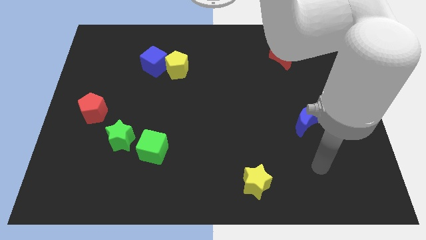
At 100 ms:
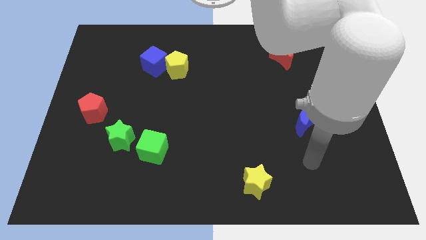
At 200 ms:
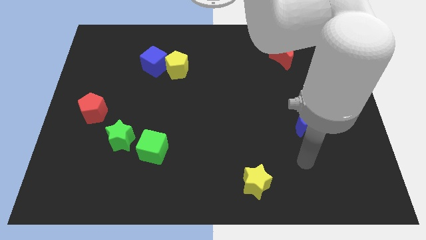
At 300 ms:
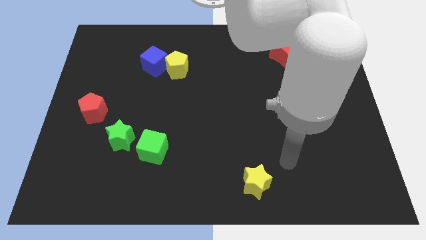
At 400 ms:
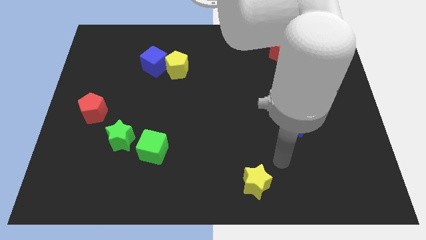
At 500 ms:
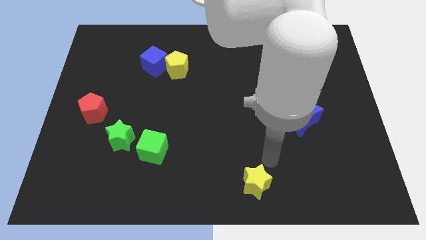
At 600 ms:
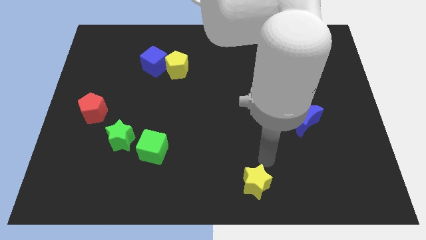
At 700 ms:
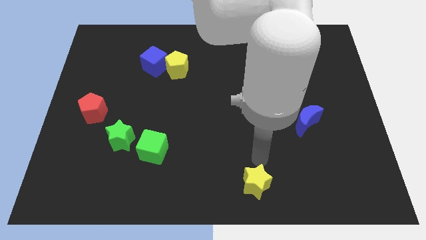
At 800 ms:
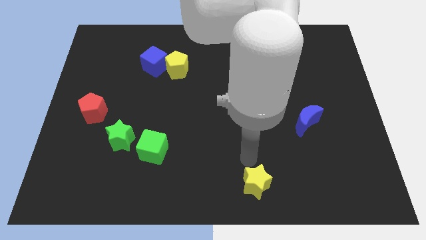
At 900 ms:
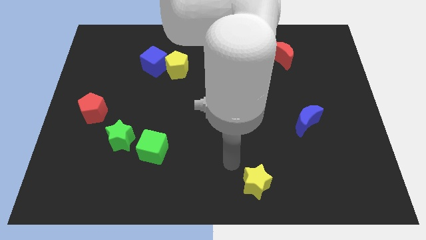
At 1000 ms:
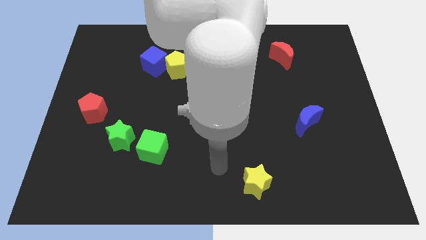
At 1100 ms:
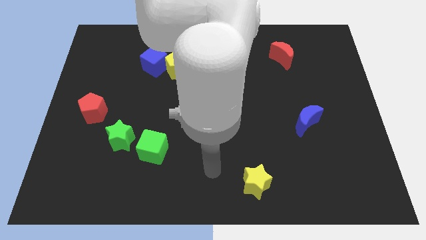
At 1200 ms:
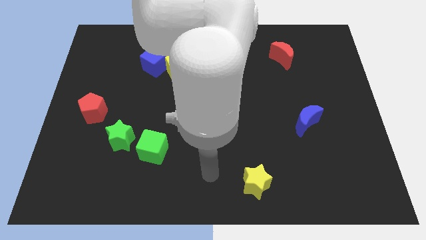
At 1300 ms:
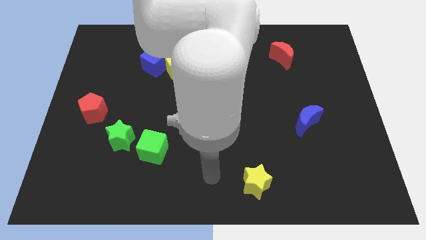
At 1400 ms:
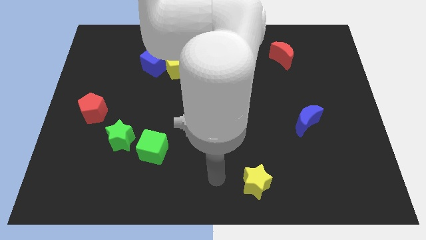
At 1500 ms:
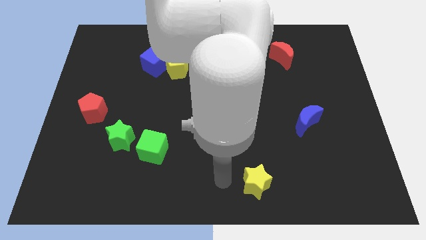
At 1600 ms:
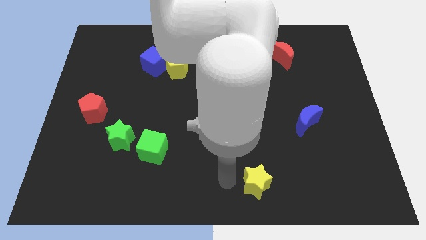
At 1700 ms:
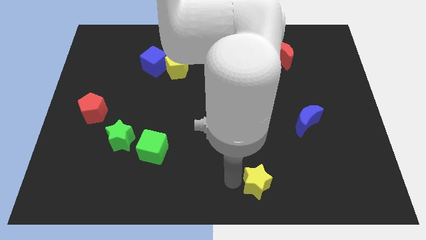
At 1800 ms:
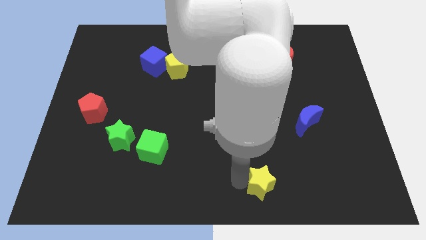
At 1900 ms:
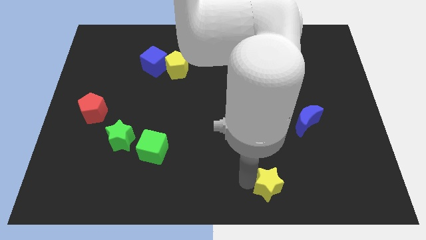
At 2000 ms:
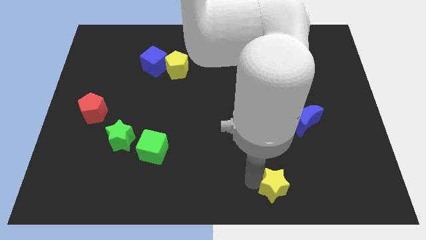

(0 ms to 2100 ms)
move yellow star slightly to the right

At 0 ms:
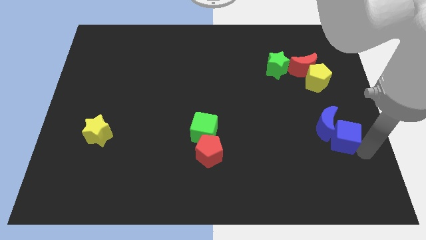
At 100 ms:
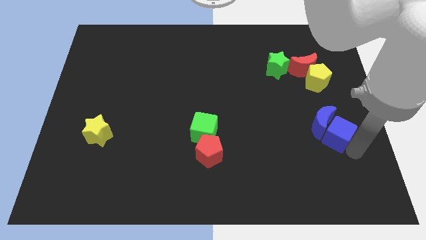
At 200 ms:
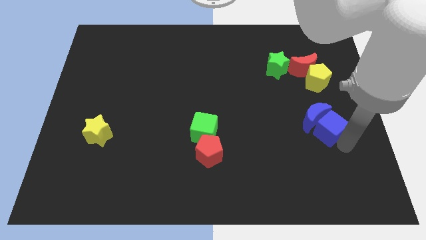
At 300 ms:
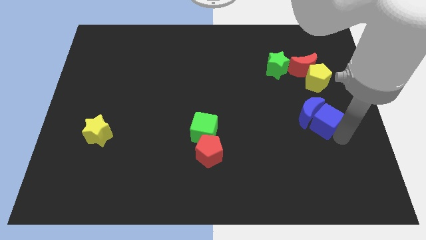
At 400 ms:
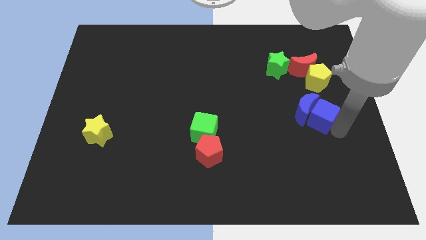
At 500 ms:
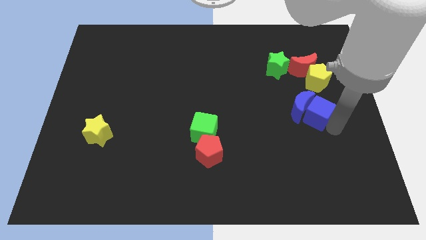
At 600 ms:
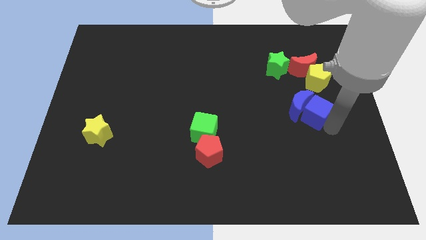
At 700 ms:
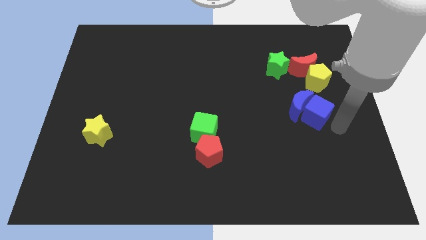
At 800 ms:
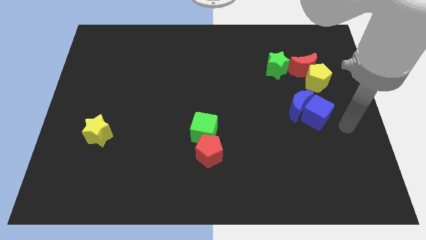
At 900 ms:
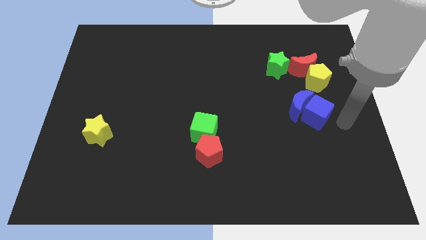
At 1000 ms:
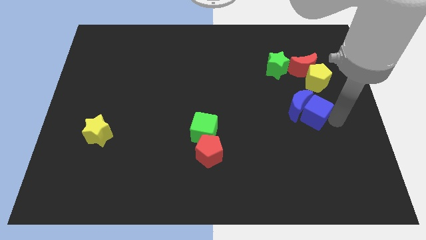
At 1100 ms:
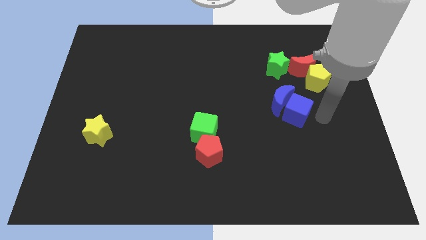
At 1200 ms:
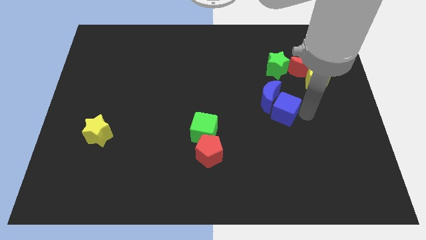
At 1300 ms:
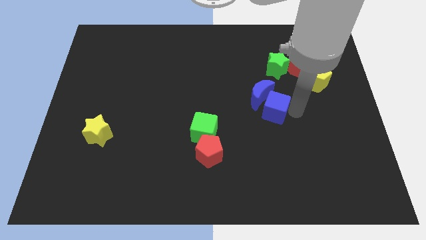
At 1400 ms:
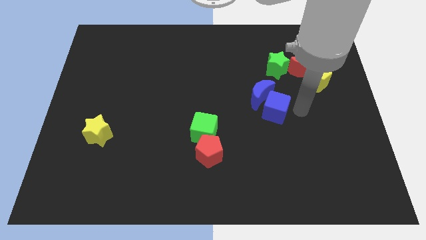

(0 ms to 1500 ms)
push the blue cube and blue crescent towards the center of board

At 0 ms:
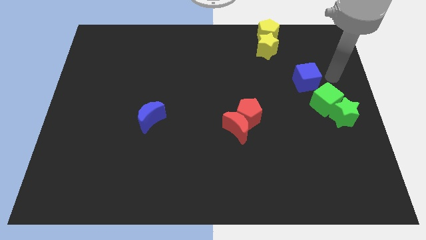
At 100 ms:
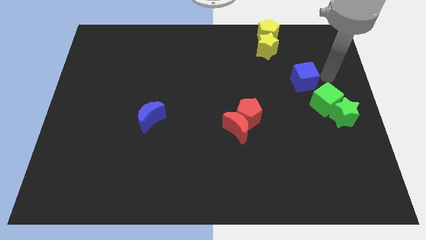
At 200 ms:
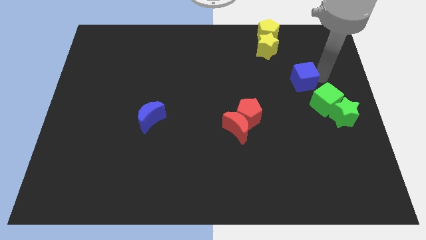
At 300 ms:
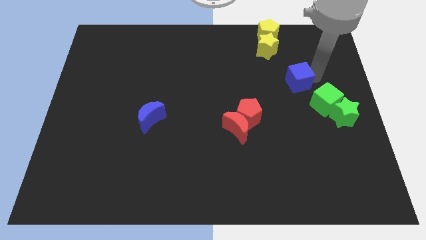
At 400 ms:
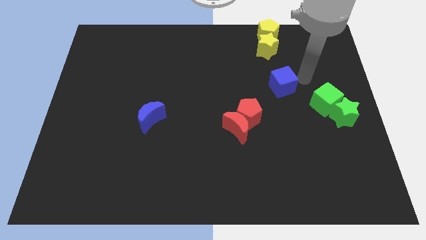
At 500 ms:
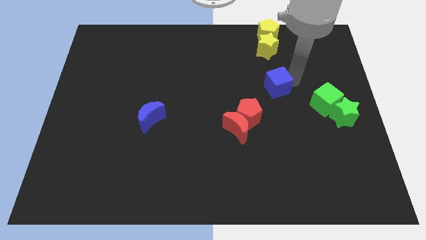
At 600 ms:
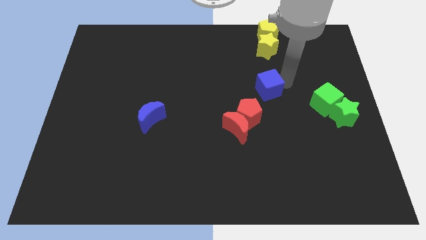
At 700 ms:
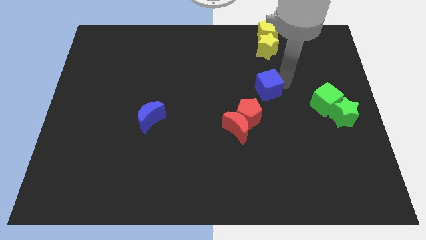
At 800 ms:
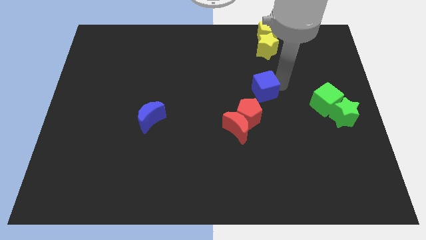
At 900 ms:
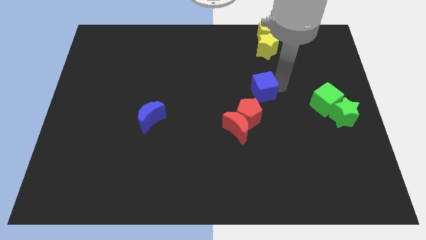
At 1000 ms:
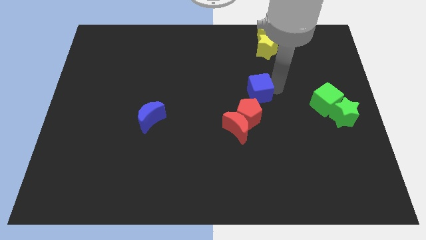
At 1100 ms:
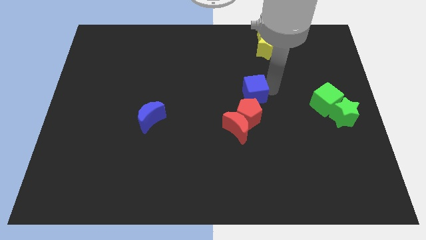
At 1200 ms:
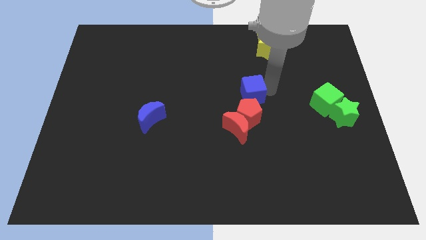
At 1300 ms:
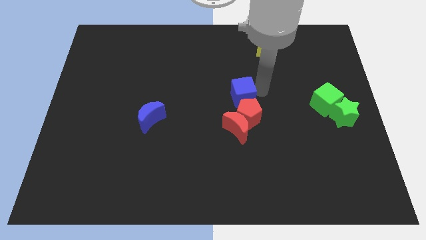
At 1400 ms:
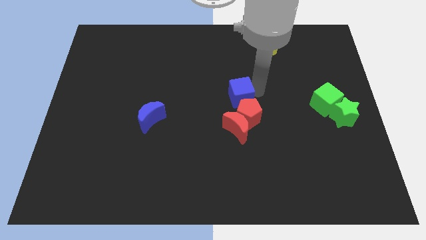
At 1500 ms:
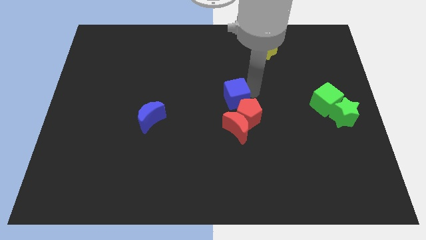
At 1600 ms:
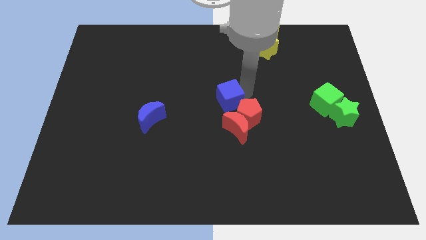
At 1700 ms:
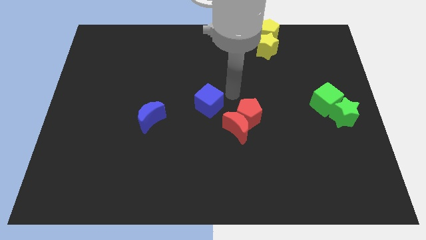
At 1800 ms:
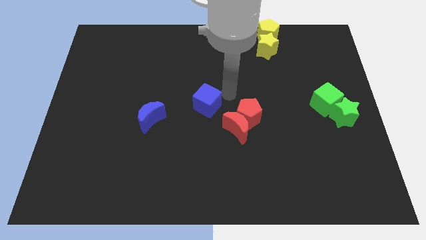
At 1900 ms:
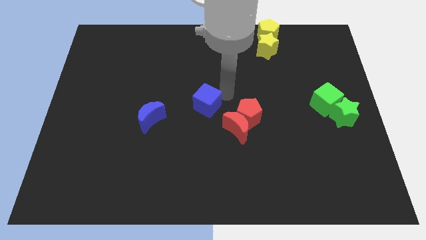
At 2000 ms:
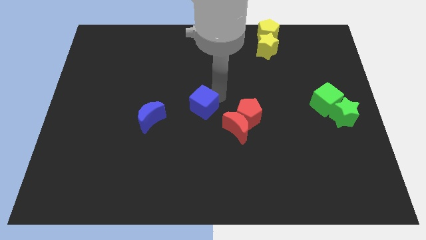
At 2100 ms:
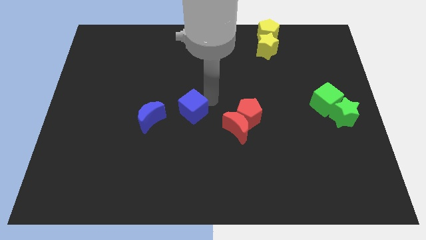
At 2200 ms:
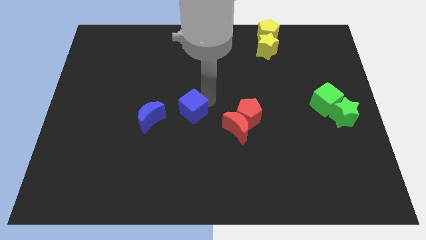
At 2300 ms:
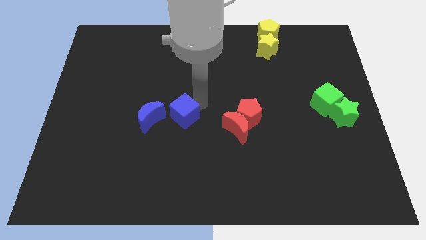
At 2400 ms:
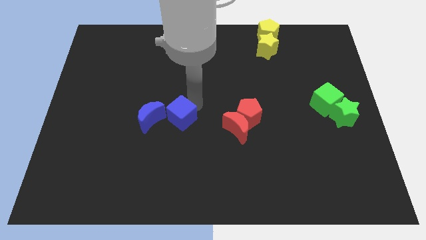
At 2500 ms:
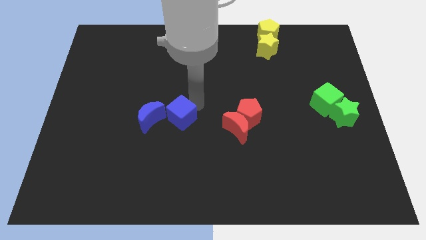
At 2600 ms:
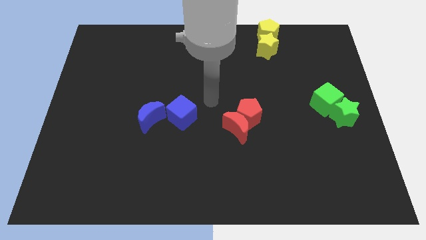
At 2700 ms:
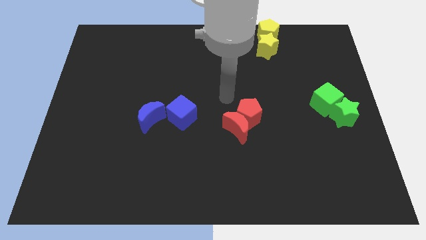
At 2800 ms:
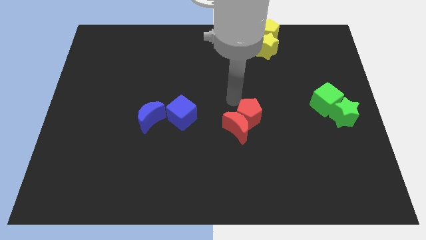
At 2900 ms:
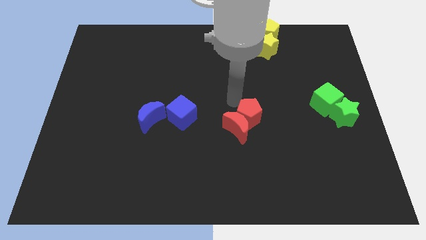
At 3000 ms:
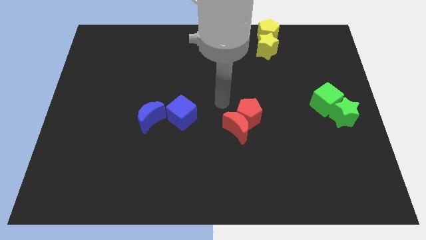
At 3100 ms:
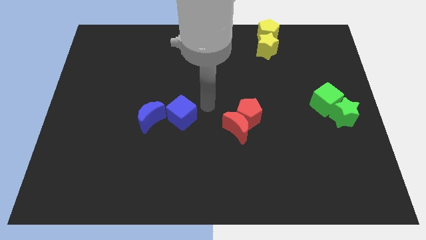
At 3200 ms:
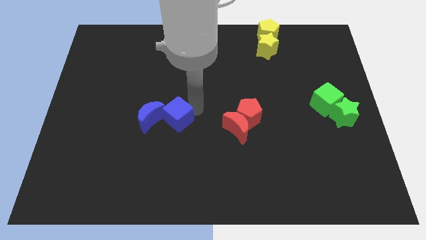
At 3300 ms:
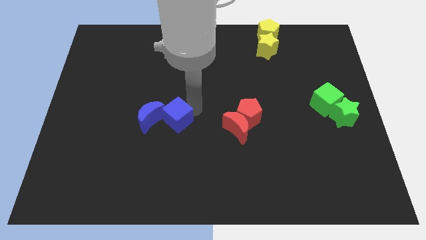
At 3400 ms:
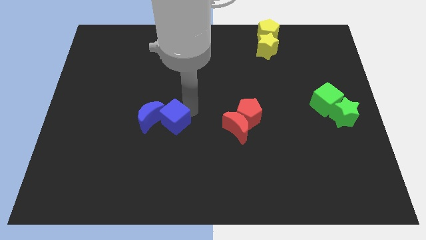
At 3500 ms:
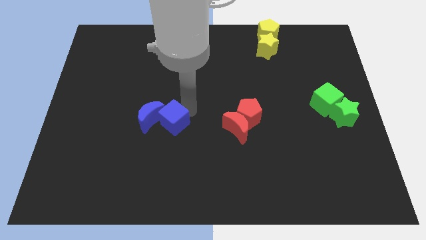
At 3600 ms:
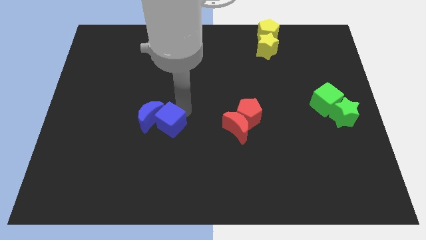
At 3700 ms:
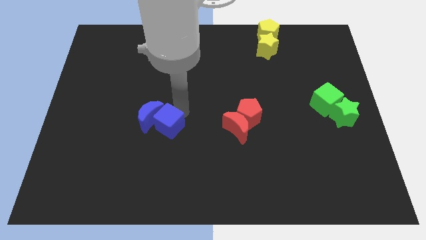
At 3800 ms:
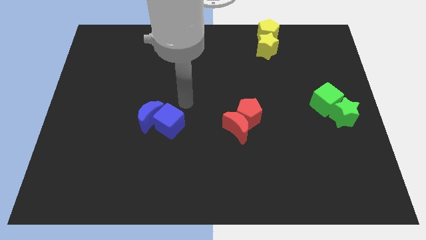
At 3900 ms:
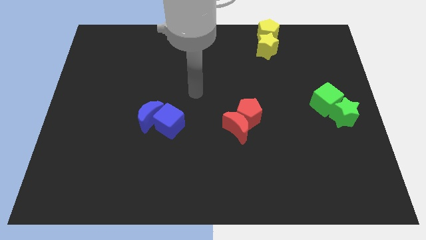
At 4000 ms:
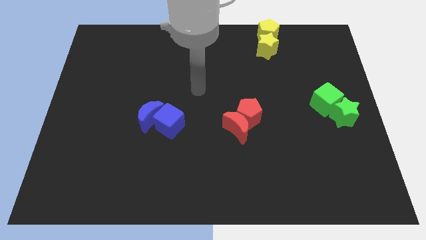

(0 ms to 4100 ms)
move the blue cube into the blue moon

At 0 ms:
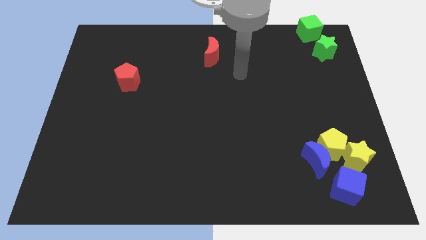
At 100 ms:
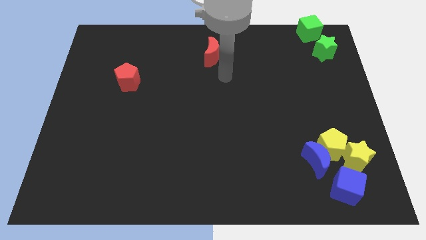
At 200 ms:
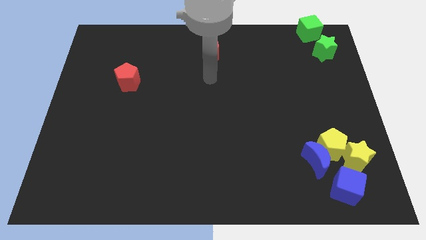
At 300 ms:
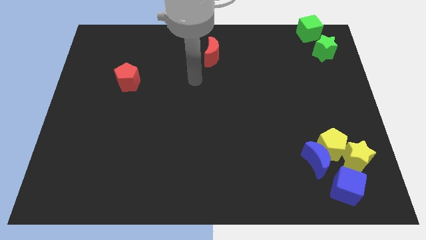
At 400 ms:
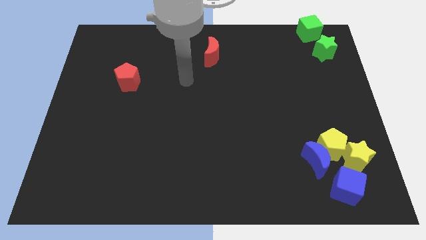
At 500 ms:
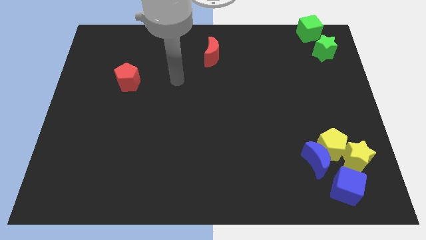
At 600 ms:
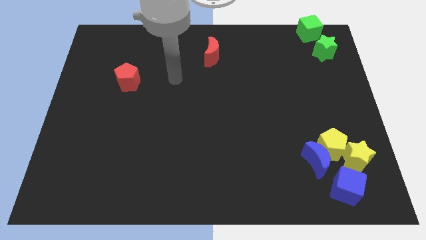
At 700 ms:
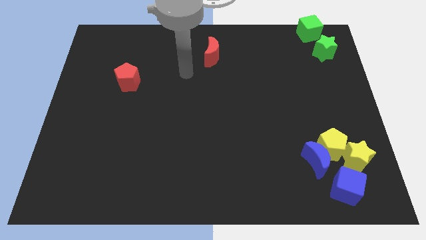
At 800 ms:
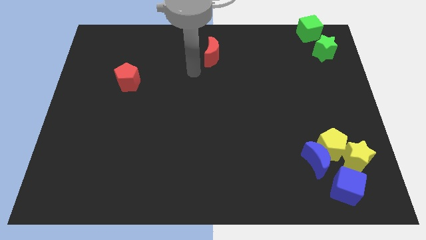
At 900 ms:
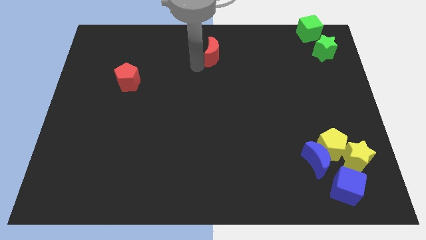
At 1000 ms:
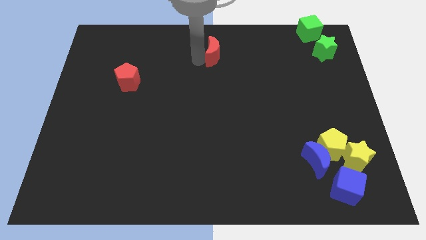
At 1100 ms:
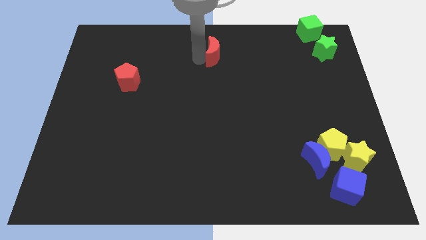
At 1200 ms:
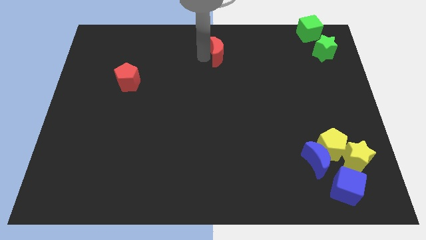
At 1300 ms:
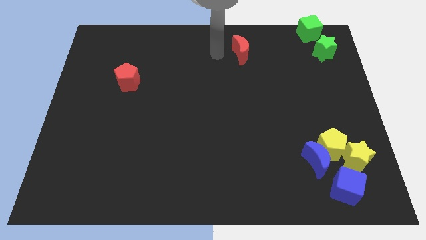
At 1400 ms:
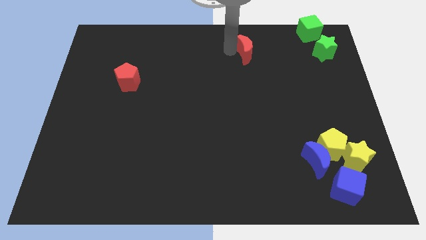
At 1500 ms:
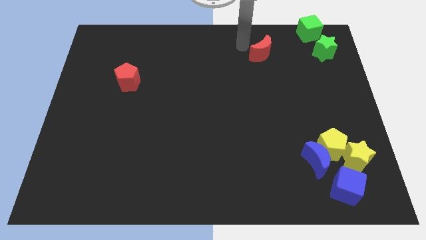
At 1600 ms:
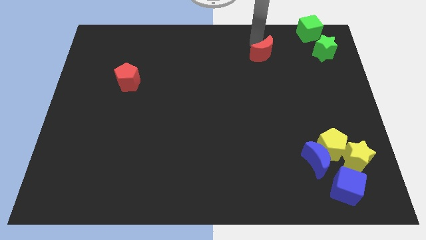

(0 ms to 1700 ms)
move the red crescent slightly to the right
